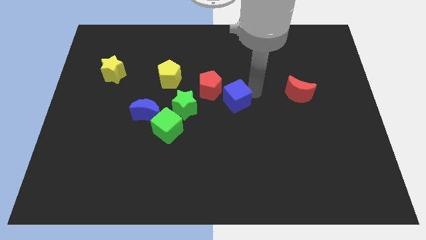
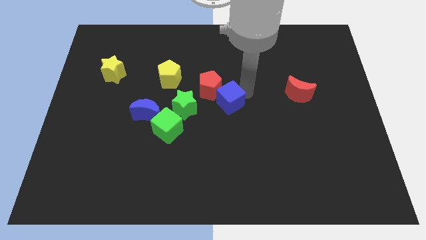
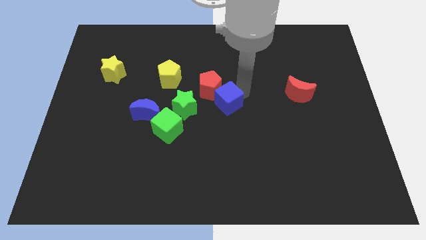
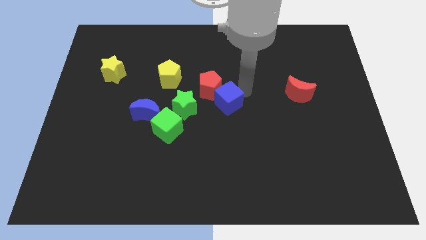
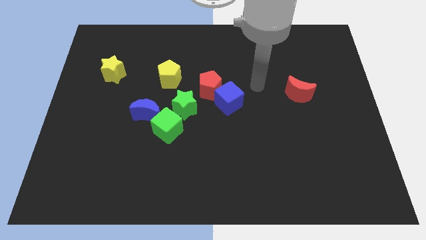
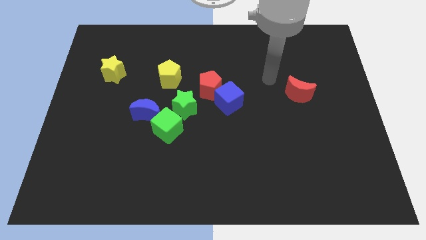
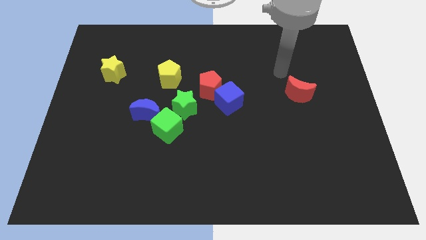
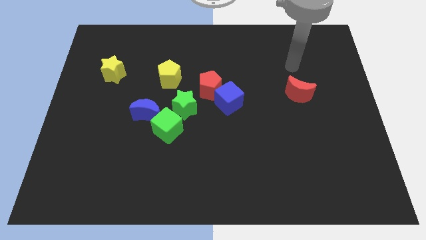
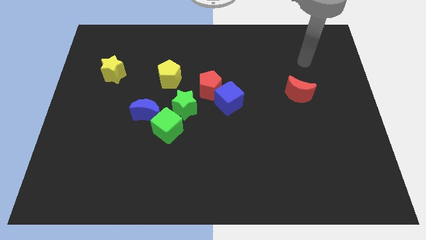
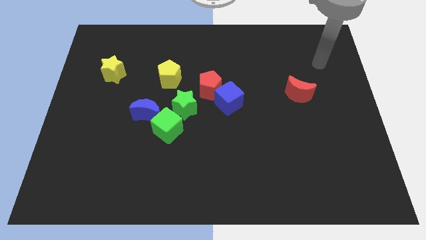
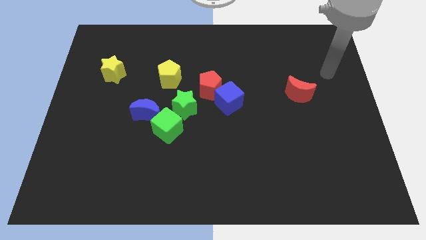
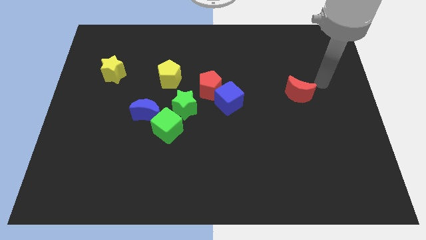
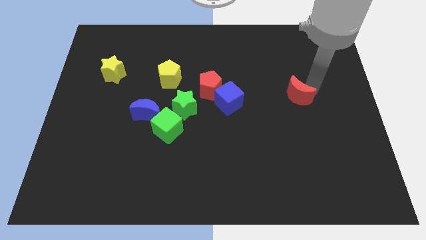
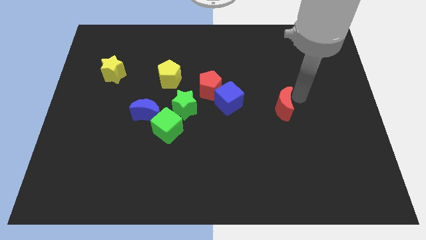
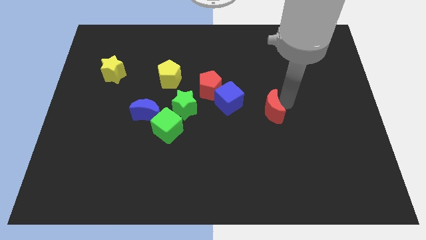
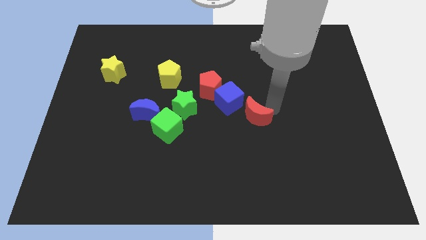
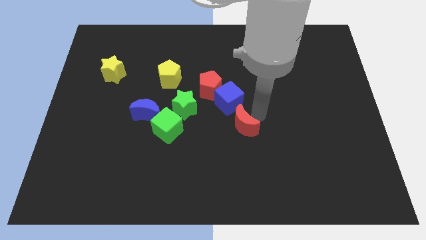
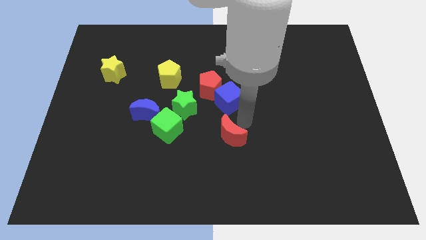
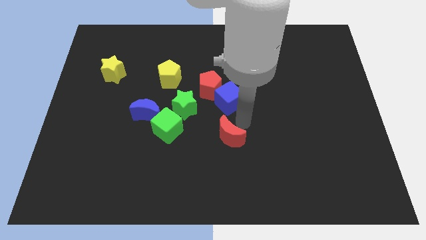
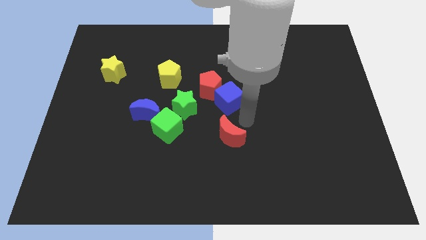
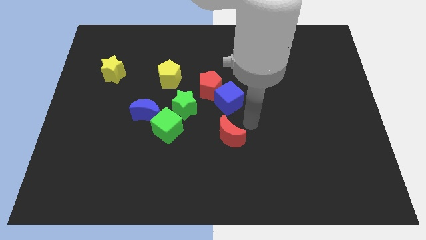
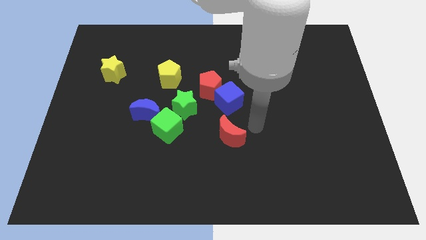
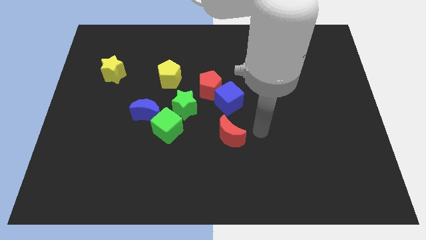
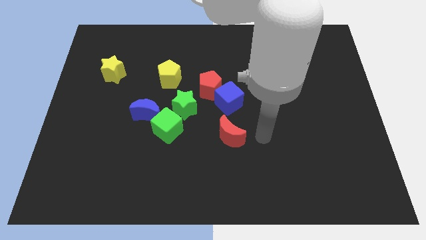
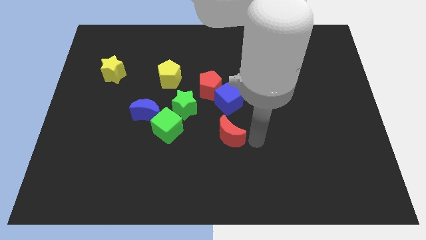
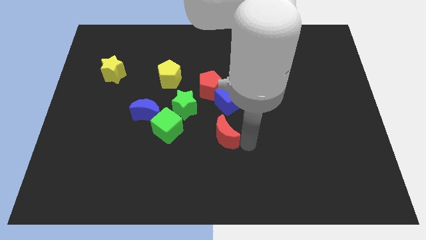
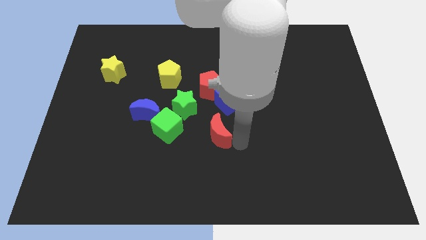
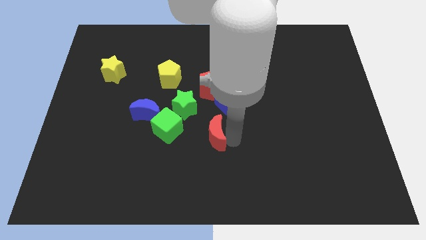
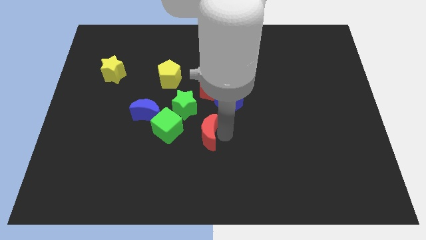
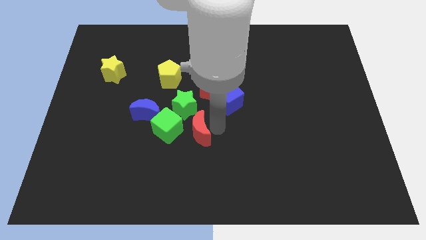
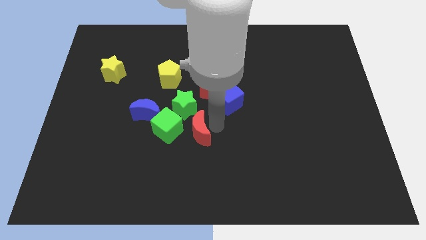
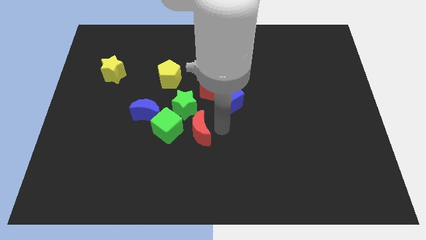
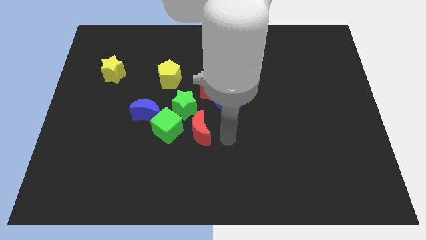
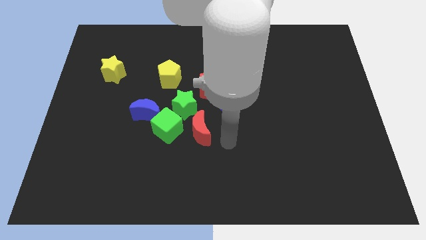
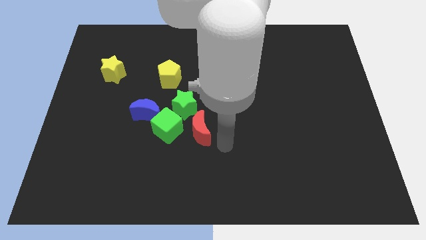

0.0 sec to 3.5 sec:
place the red crescent at the bottom right side of the green cube

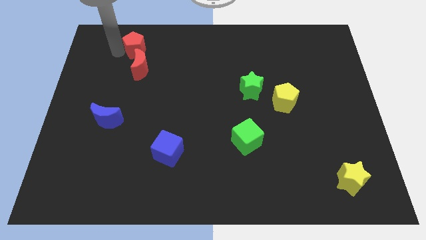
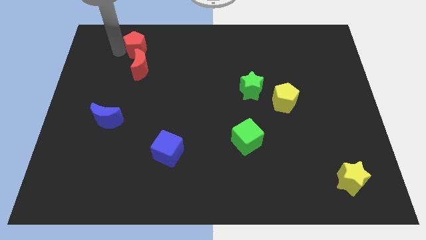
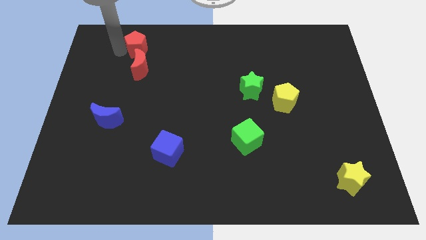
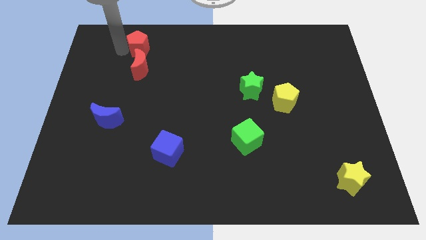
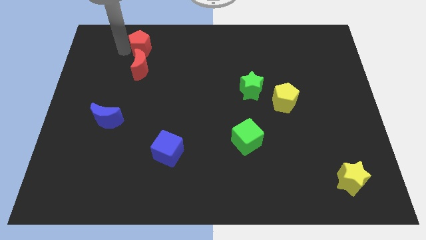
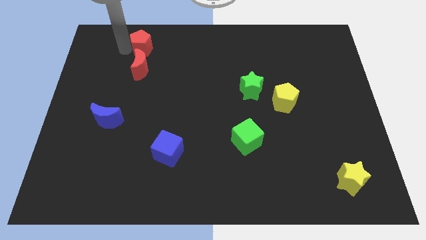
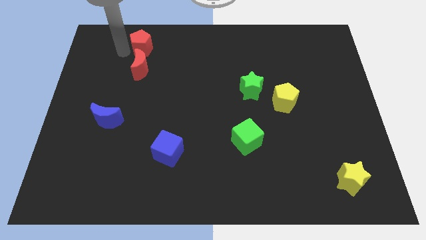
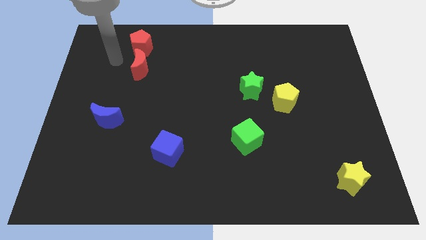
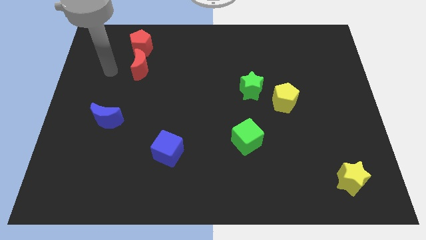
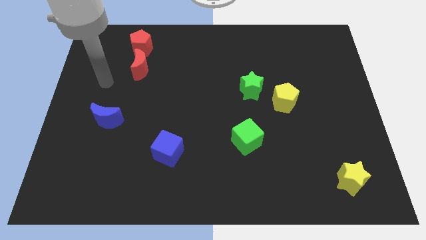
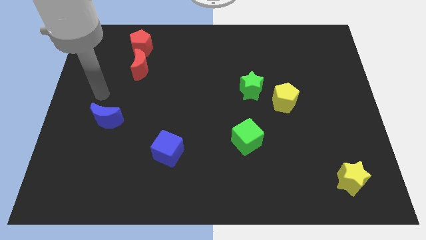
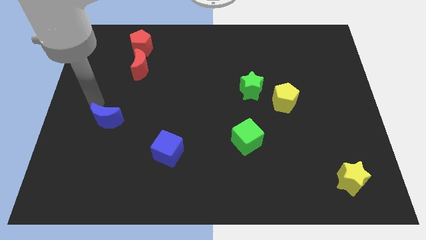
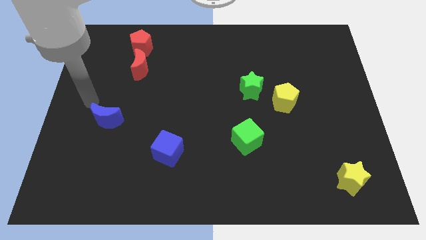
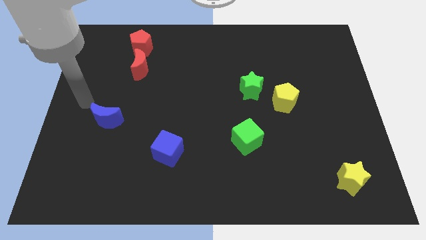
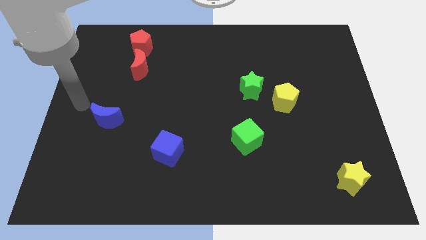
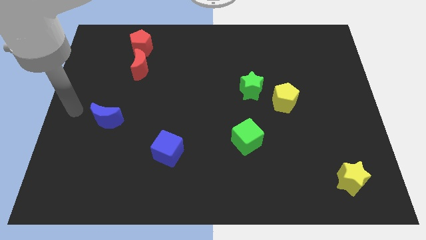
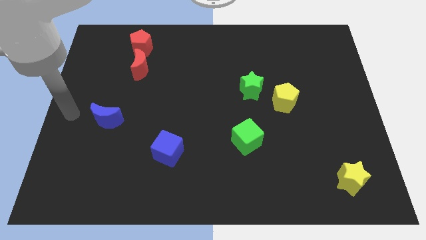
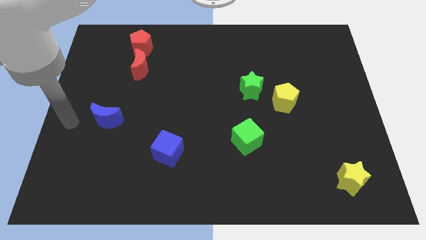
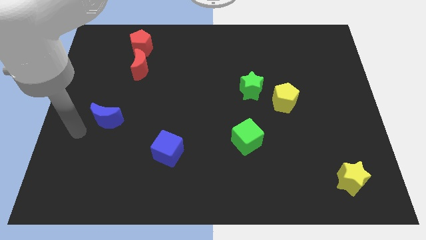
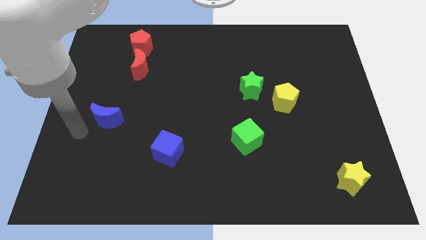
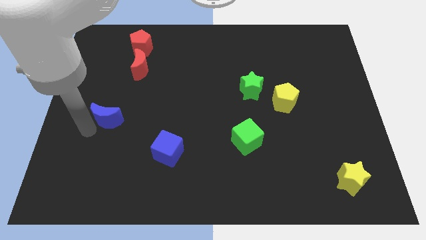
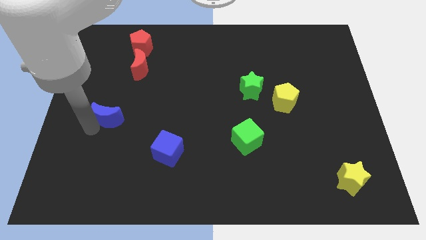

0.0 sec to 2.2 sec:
move arm near blue moon

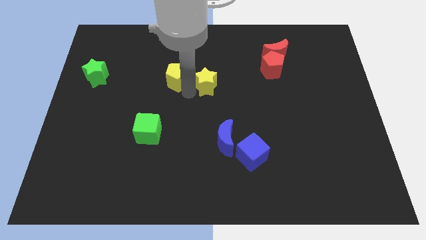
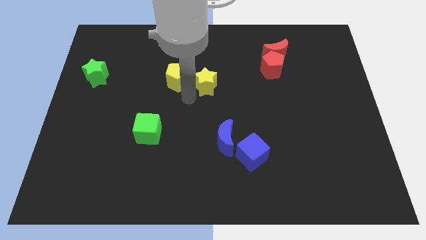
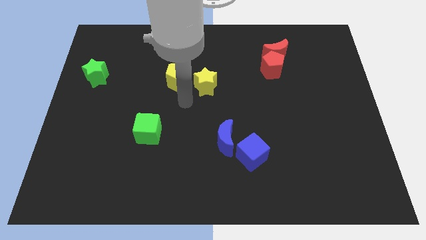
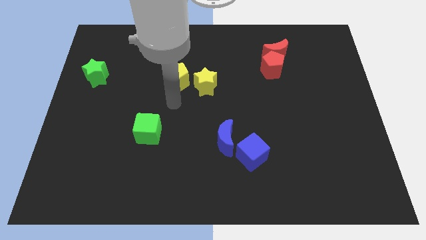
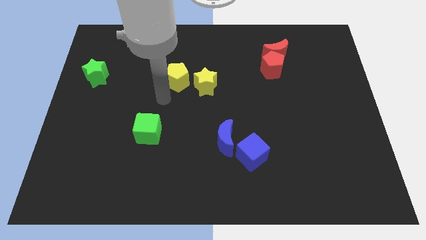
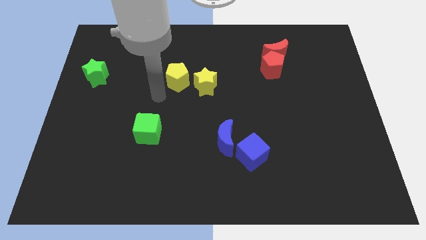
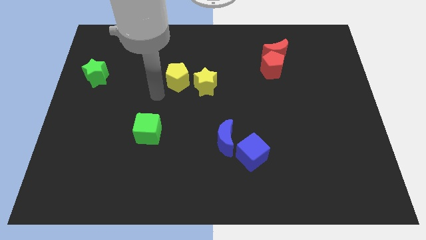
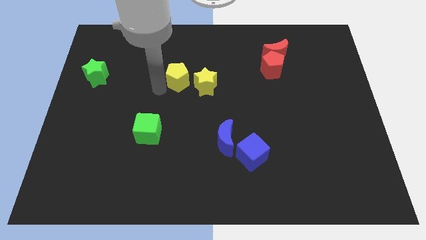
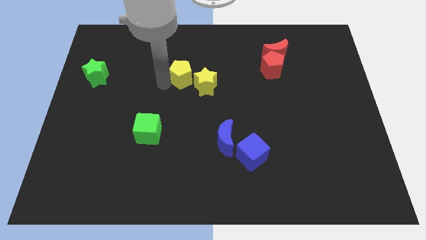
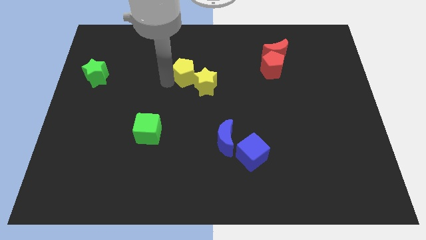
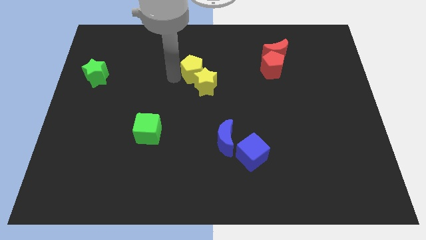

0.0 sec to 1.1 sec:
slide yellow pentagon to the top left of yellow star

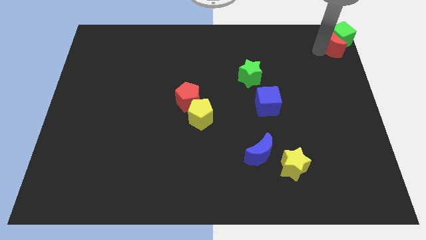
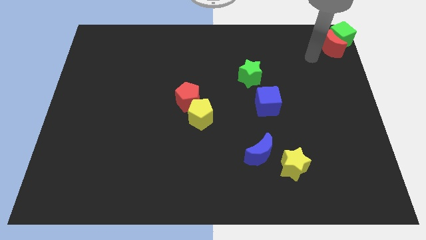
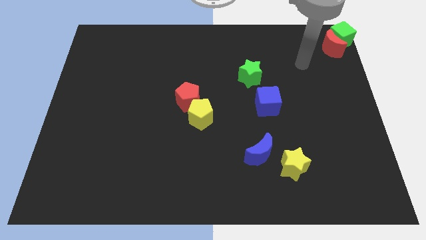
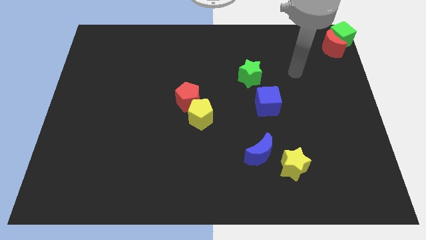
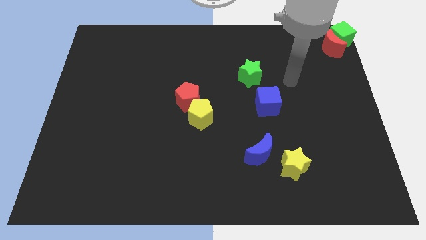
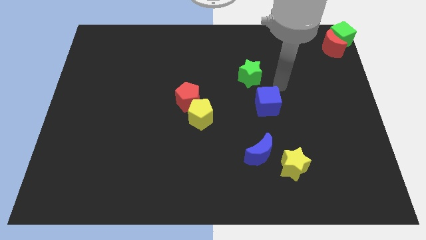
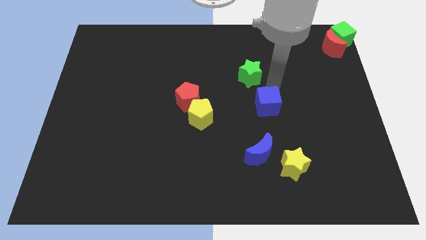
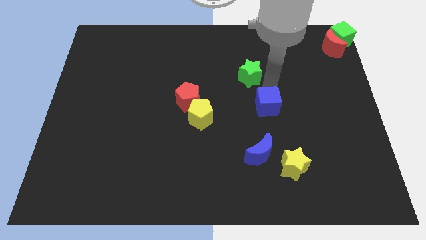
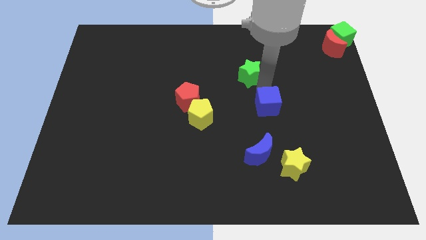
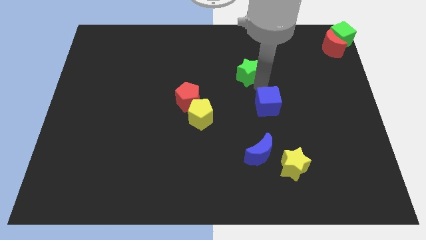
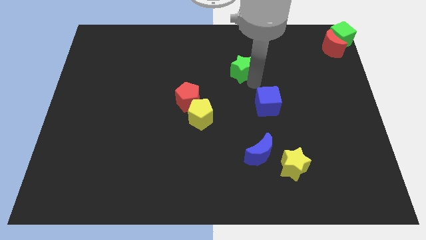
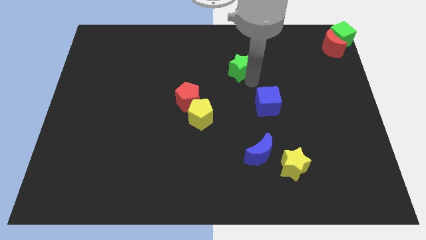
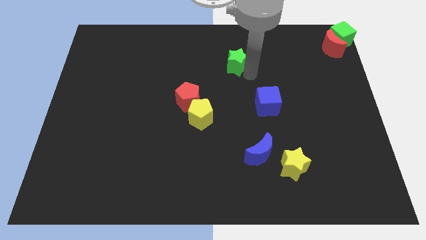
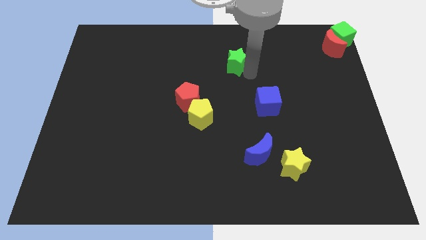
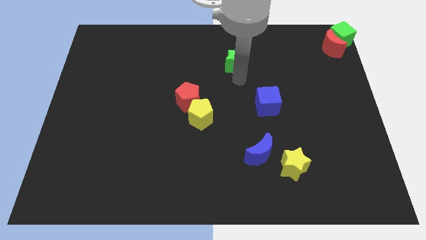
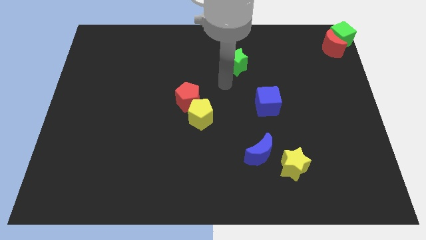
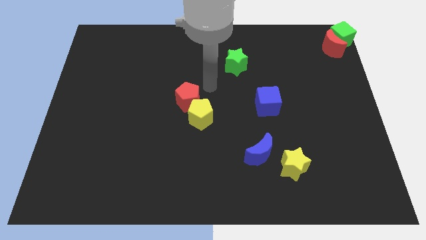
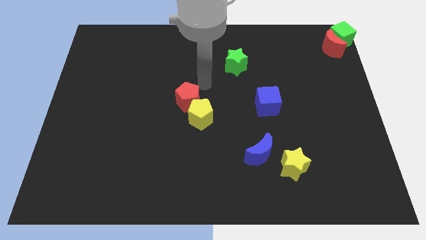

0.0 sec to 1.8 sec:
move your arm away from the red moon

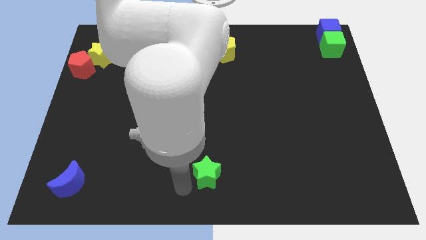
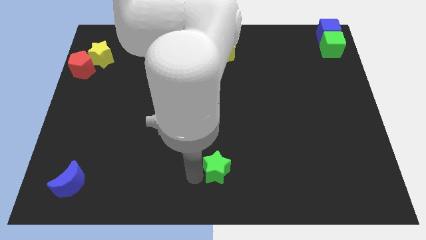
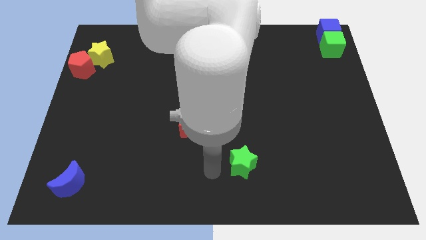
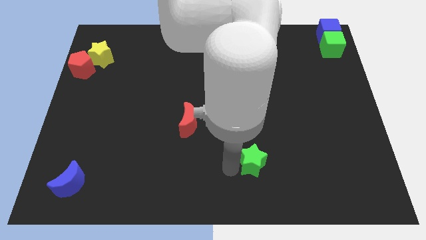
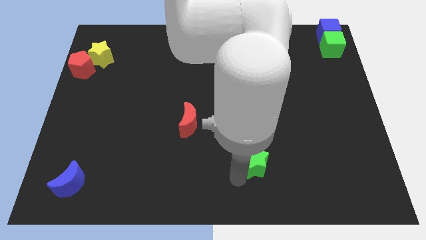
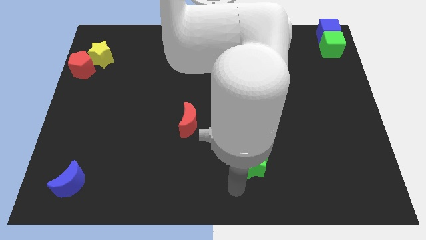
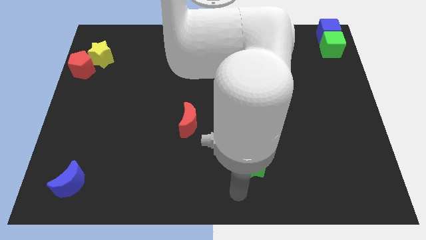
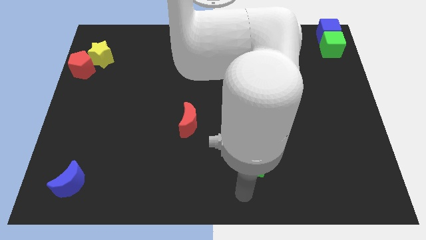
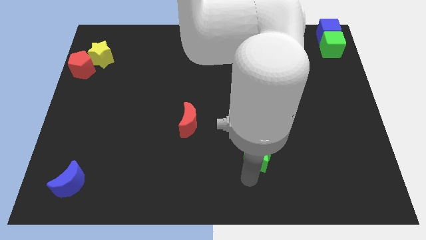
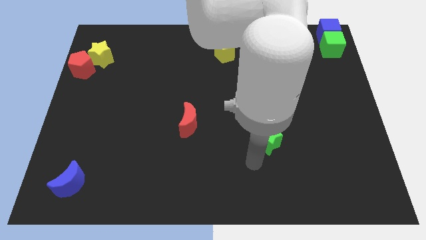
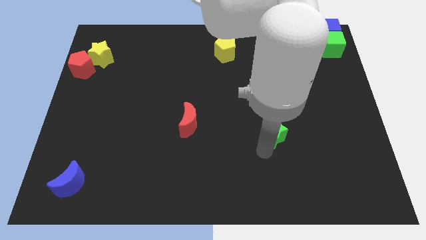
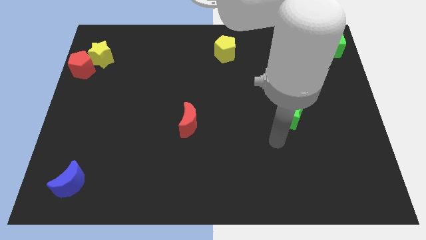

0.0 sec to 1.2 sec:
slide the green star horizontally on the right side of the red moon
